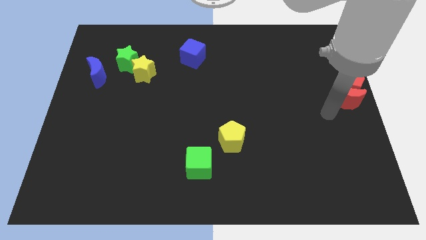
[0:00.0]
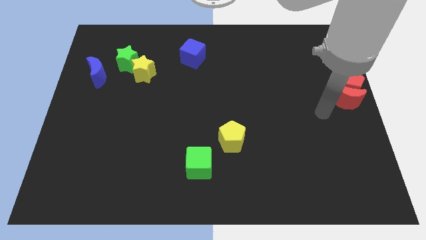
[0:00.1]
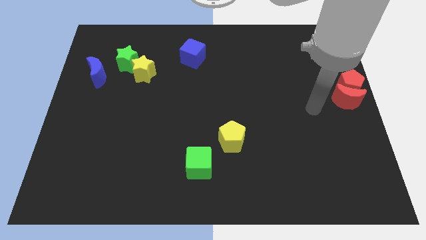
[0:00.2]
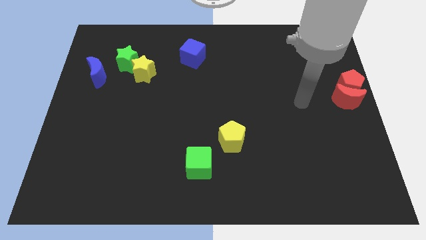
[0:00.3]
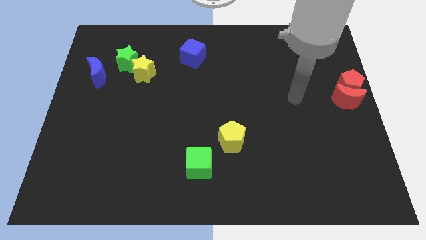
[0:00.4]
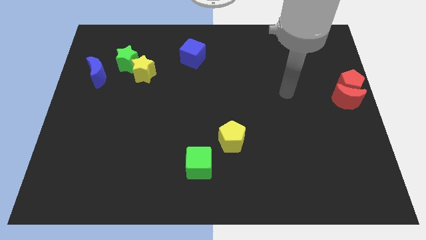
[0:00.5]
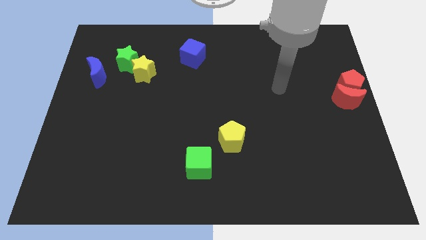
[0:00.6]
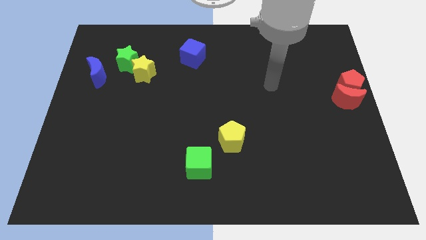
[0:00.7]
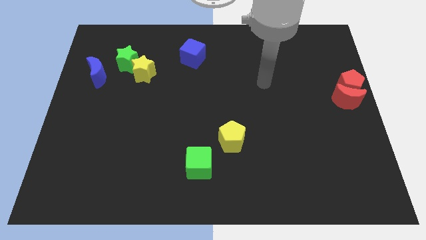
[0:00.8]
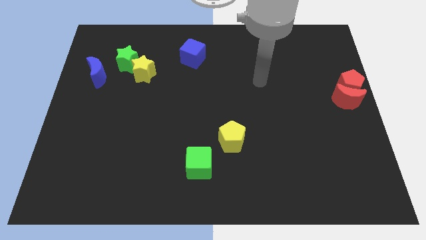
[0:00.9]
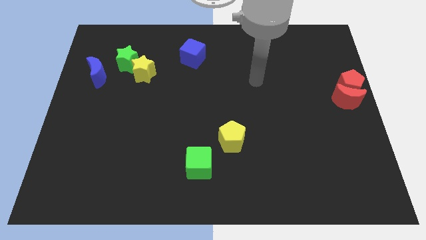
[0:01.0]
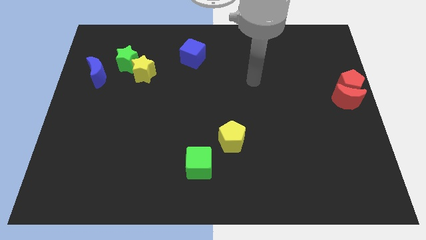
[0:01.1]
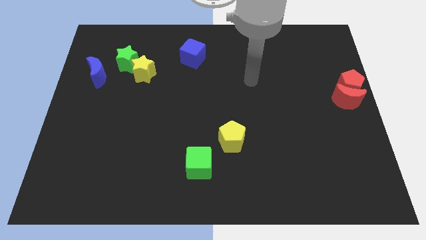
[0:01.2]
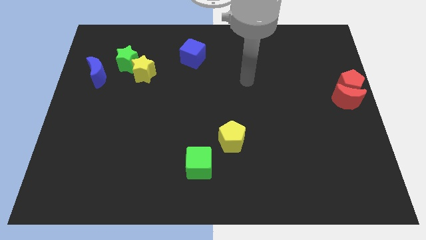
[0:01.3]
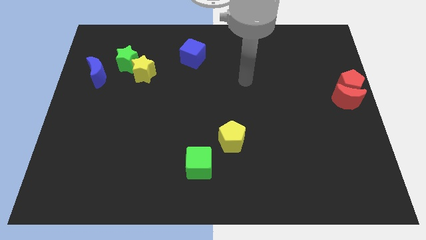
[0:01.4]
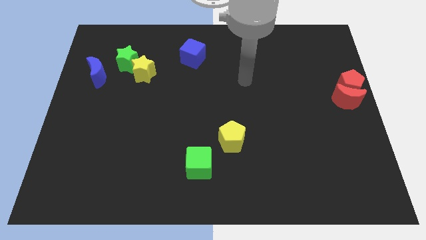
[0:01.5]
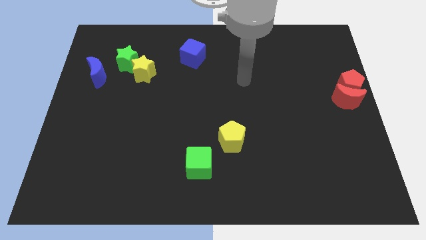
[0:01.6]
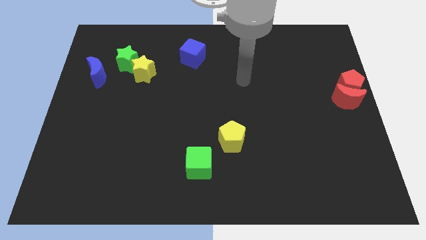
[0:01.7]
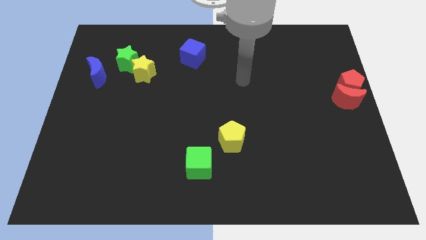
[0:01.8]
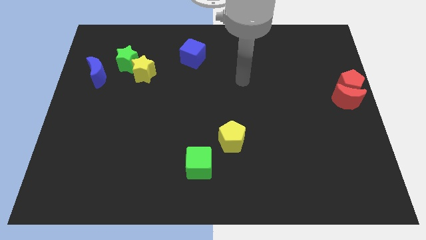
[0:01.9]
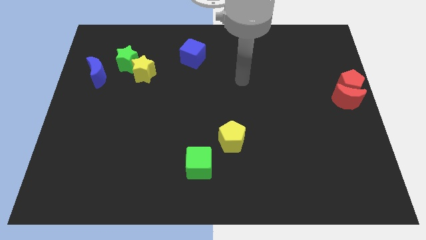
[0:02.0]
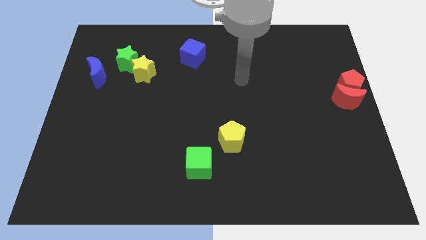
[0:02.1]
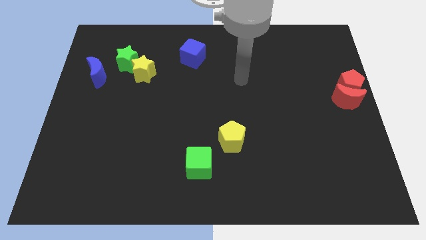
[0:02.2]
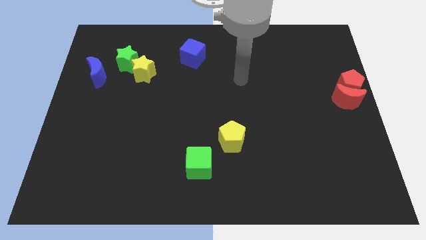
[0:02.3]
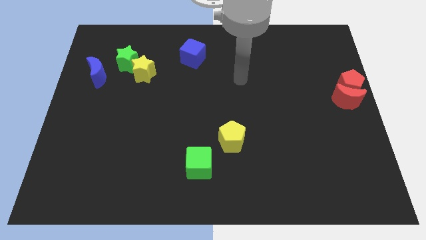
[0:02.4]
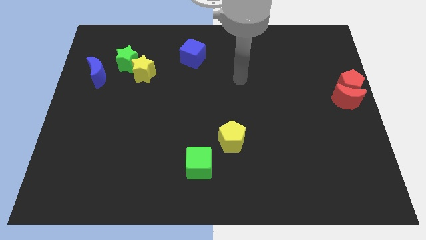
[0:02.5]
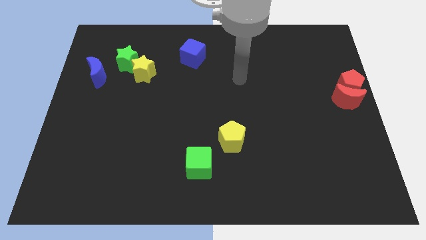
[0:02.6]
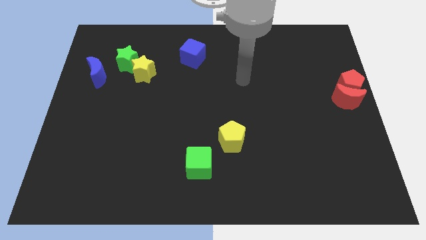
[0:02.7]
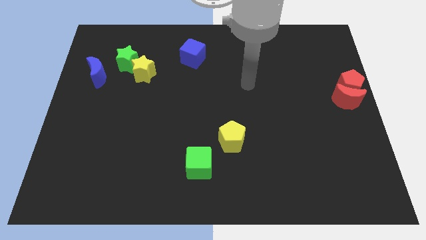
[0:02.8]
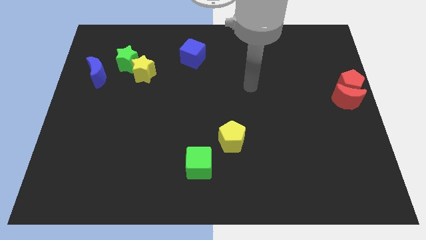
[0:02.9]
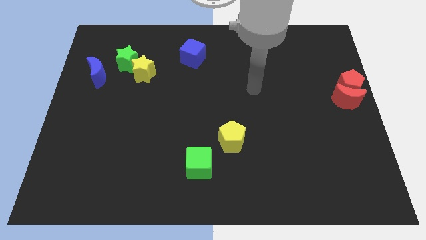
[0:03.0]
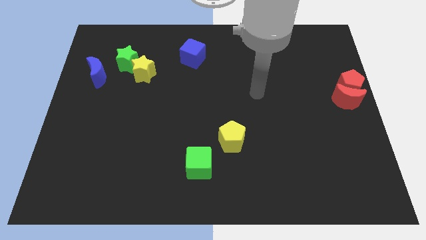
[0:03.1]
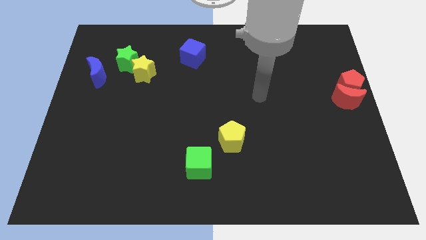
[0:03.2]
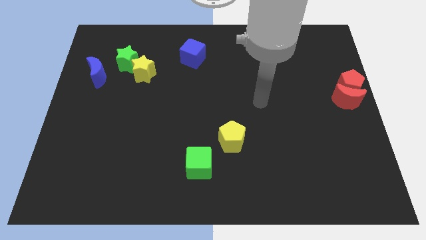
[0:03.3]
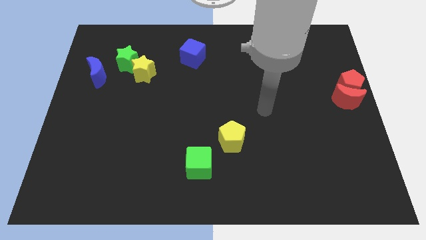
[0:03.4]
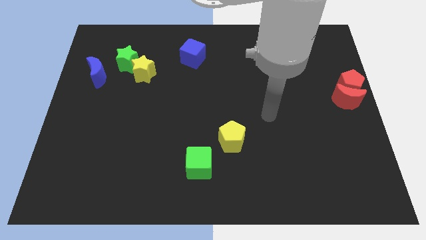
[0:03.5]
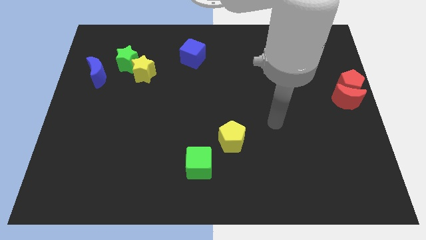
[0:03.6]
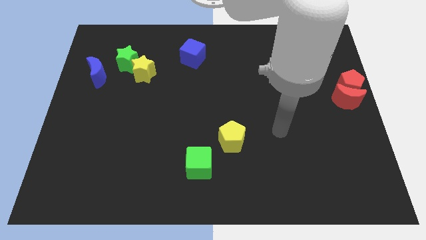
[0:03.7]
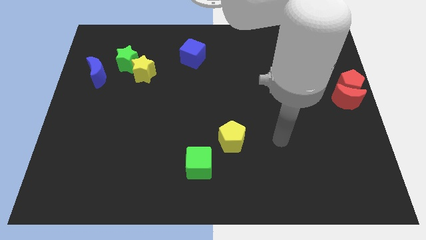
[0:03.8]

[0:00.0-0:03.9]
point your arm at the right of the yellow pentagon

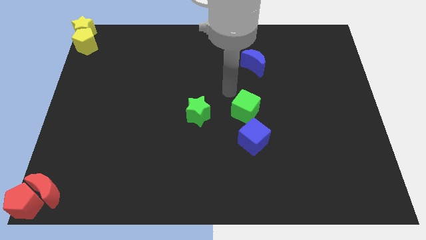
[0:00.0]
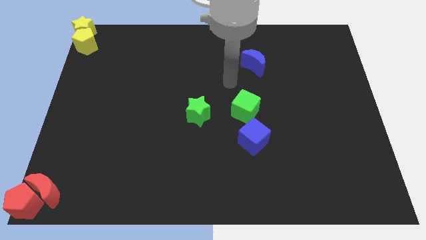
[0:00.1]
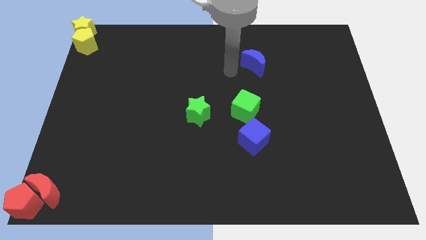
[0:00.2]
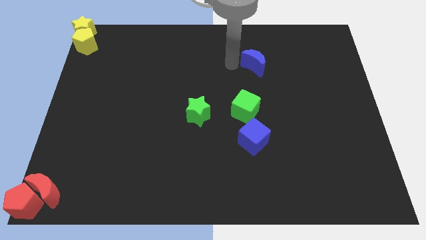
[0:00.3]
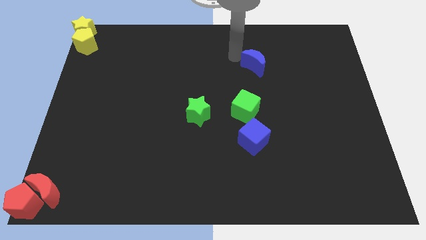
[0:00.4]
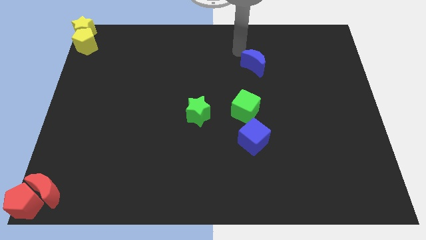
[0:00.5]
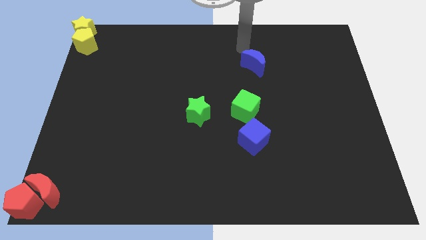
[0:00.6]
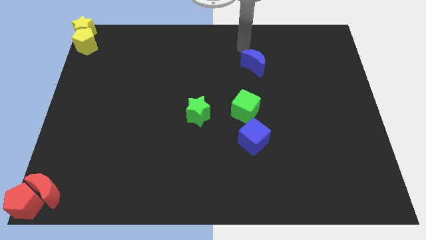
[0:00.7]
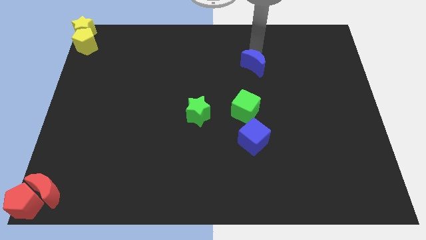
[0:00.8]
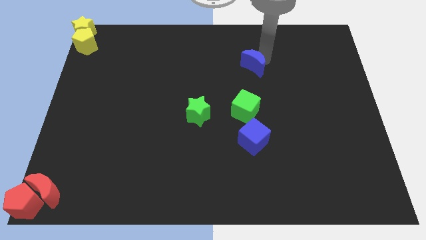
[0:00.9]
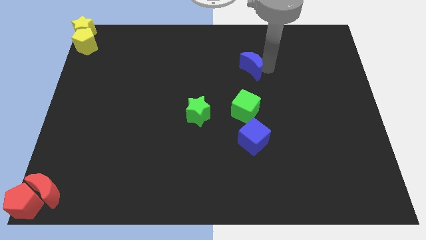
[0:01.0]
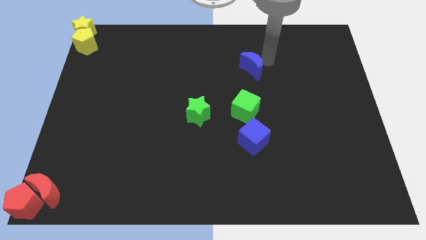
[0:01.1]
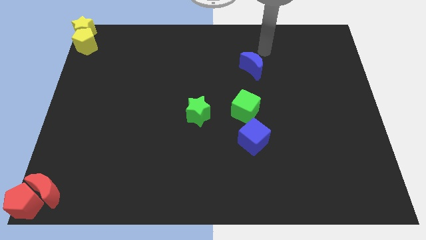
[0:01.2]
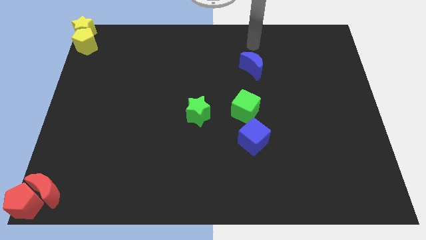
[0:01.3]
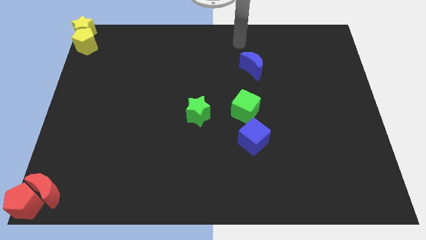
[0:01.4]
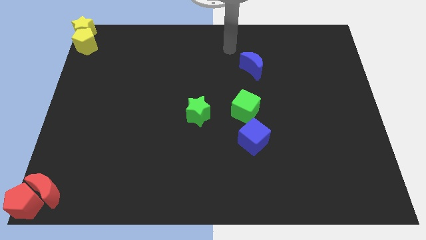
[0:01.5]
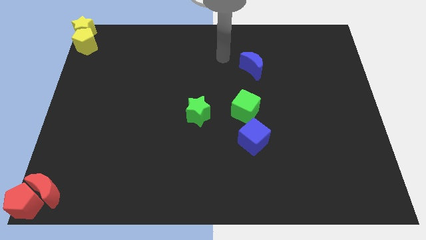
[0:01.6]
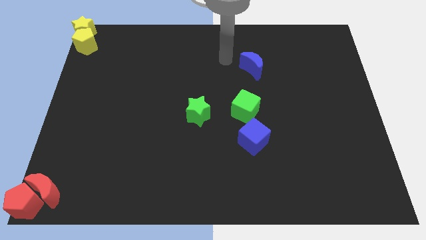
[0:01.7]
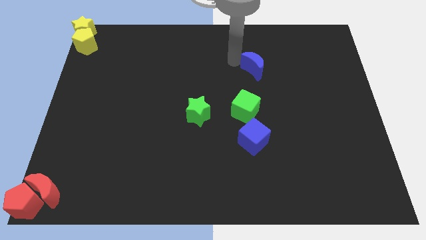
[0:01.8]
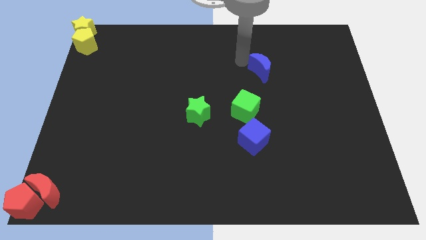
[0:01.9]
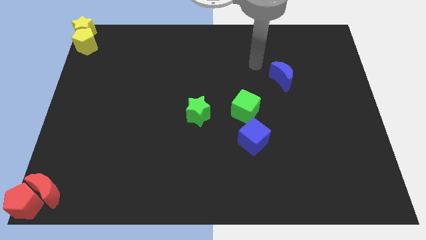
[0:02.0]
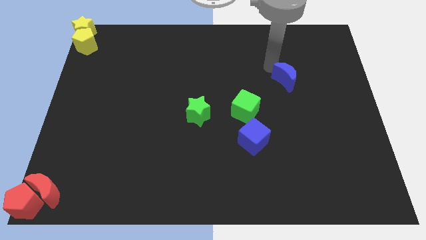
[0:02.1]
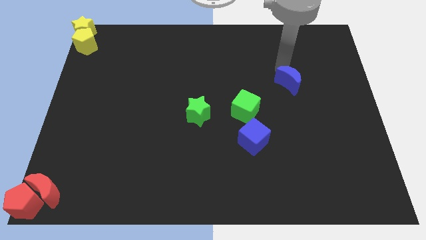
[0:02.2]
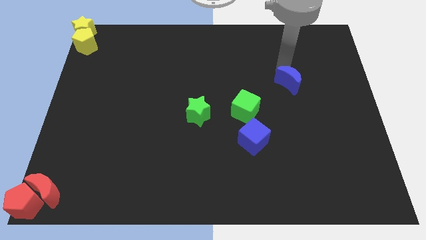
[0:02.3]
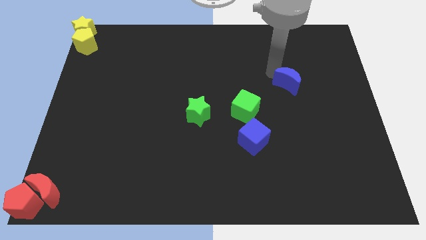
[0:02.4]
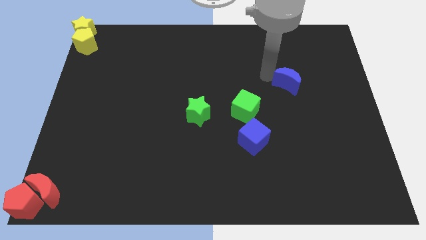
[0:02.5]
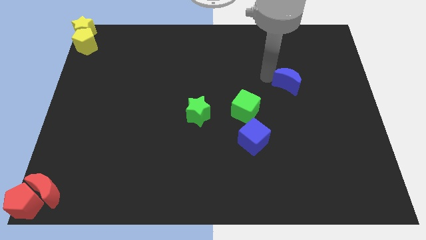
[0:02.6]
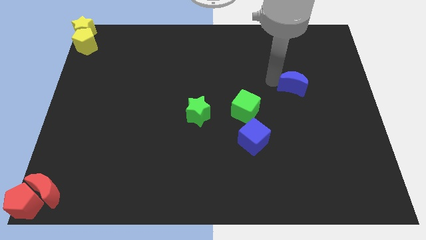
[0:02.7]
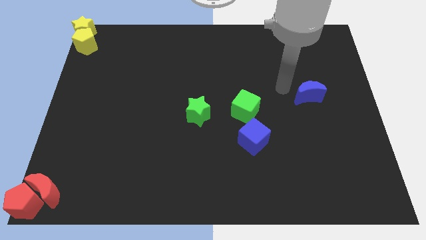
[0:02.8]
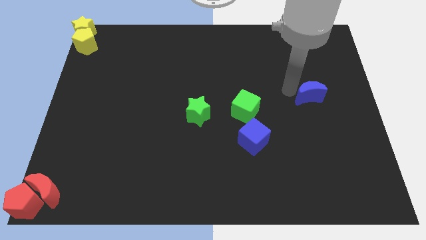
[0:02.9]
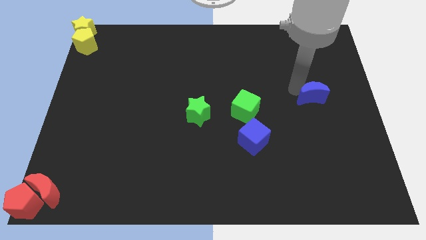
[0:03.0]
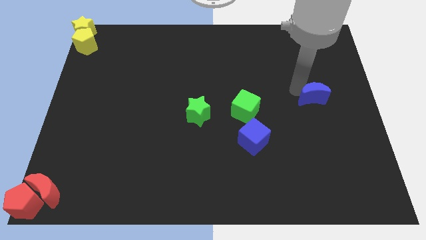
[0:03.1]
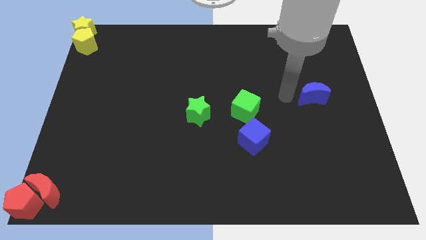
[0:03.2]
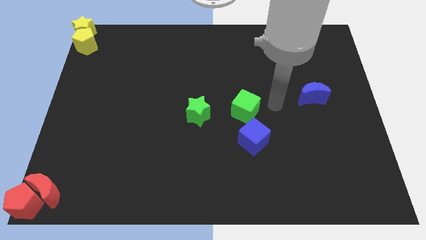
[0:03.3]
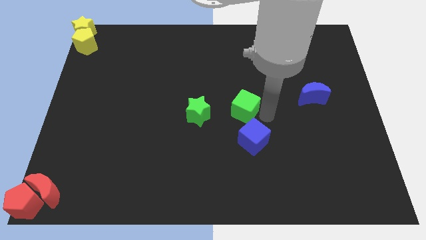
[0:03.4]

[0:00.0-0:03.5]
push the blue crescent to the right of the green cube

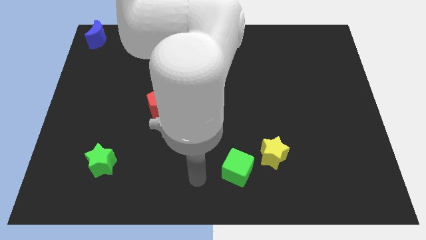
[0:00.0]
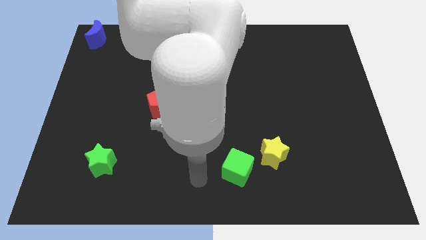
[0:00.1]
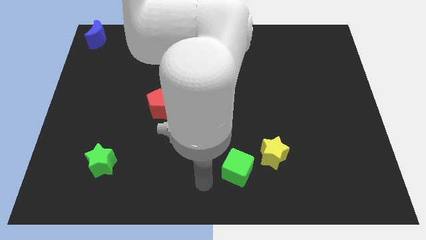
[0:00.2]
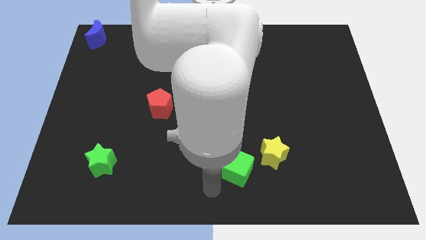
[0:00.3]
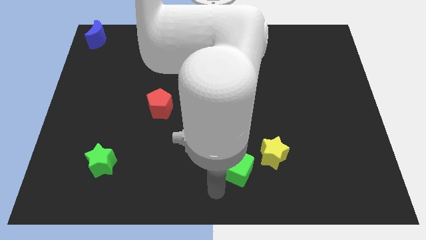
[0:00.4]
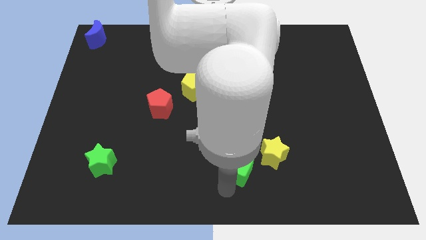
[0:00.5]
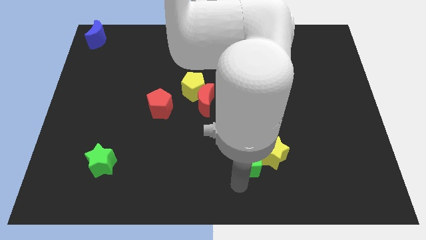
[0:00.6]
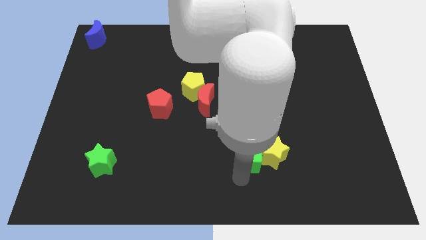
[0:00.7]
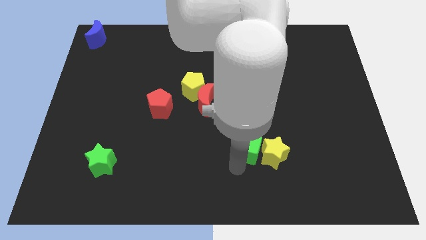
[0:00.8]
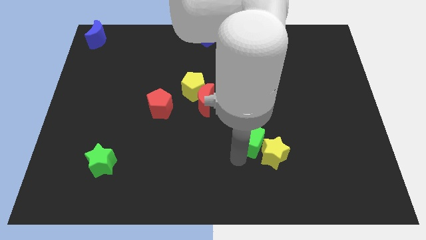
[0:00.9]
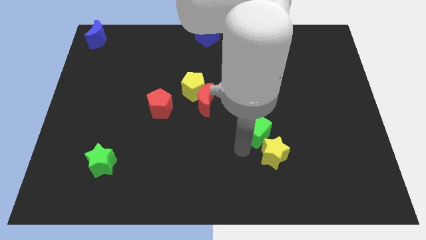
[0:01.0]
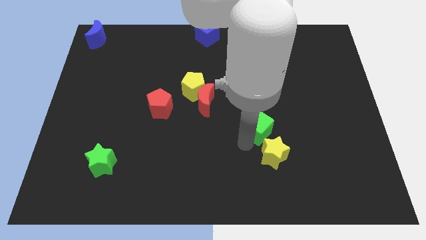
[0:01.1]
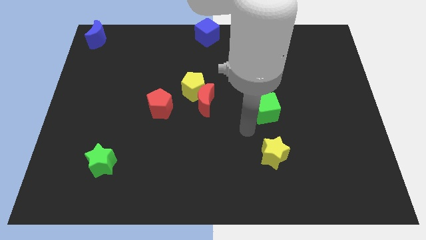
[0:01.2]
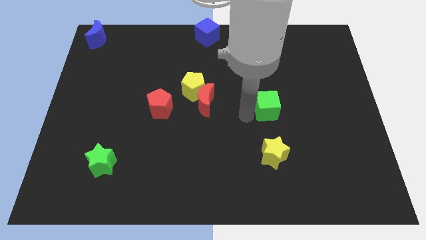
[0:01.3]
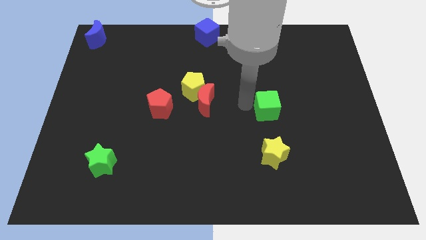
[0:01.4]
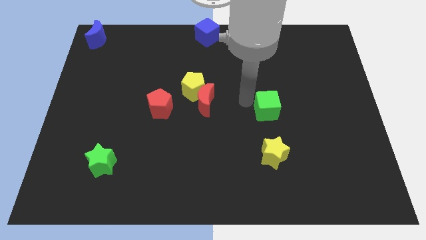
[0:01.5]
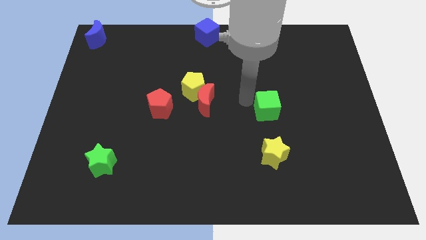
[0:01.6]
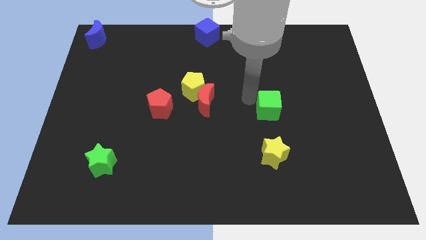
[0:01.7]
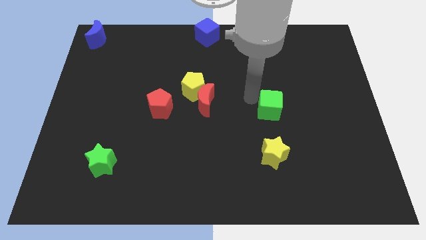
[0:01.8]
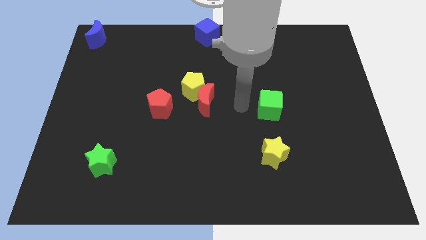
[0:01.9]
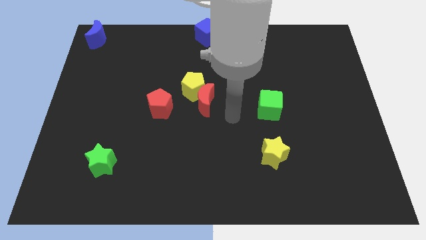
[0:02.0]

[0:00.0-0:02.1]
separate green cube from yellow star
